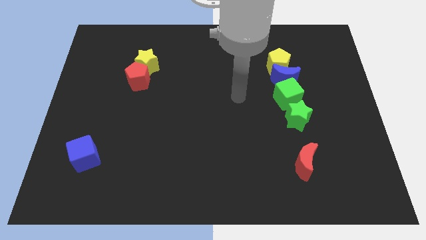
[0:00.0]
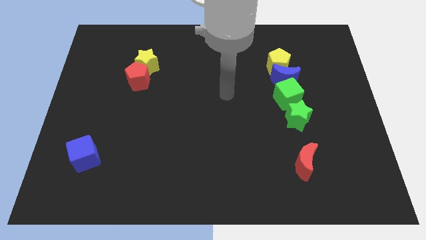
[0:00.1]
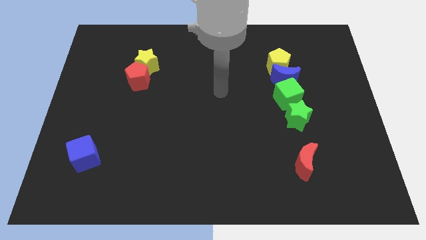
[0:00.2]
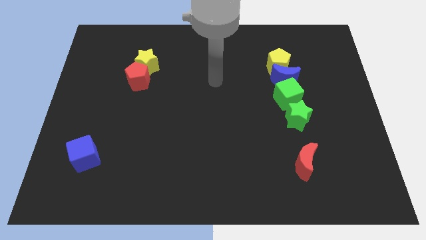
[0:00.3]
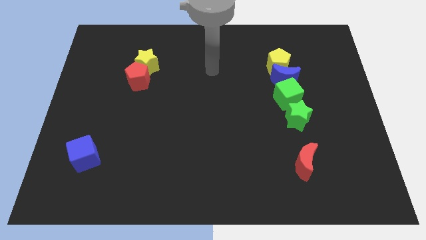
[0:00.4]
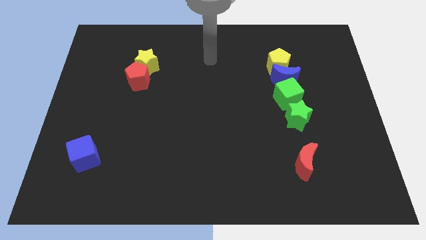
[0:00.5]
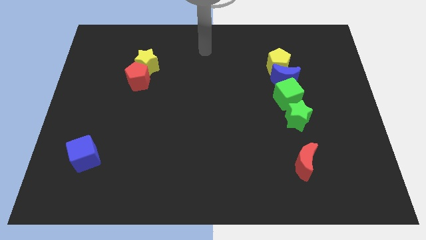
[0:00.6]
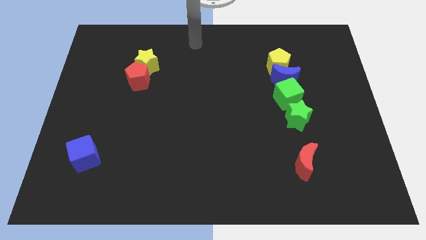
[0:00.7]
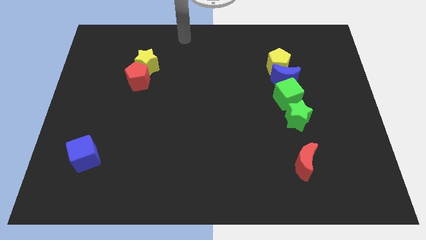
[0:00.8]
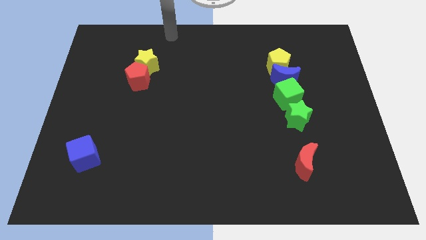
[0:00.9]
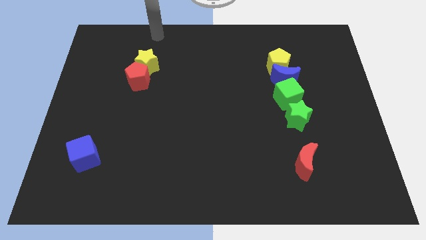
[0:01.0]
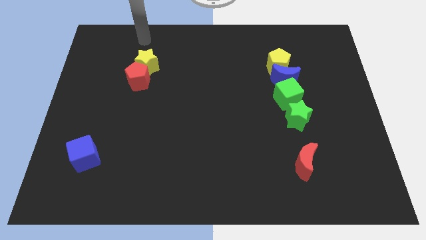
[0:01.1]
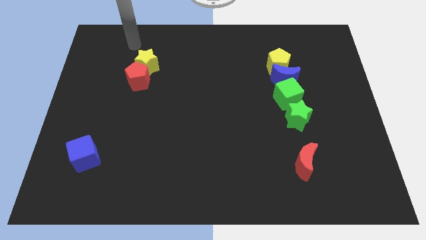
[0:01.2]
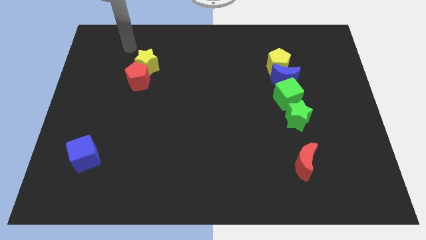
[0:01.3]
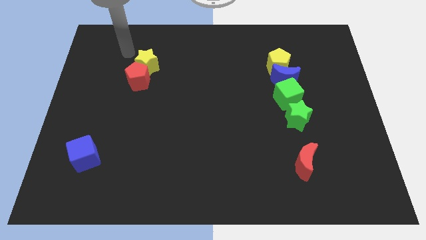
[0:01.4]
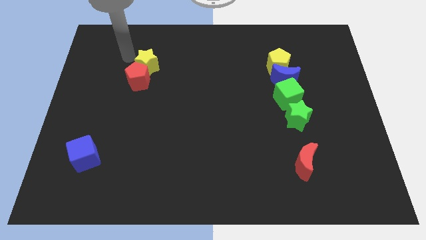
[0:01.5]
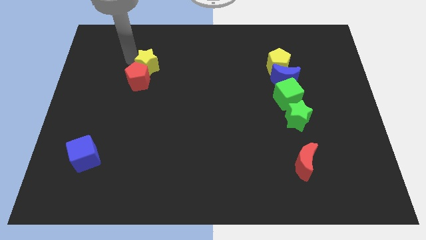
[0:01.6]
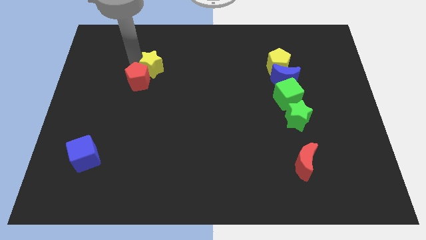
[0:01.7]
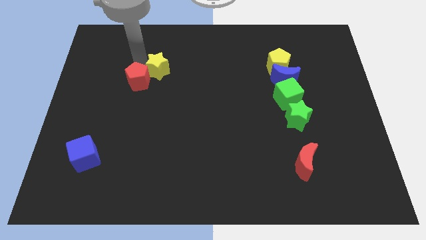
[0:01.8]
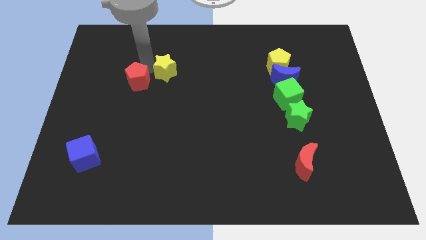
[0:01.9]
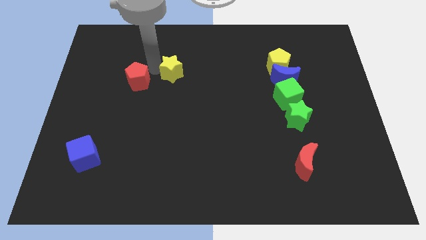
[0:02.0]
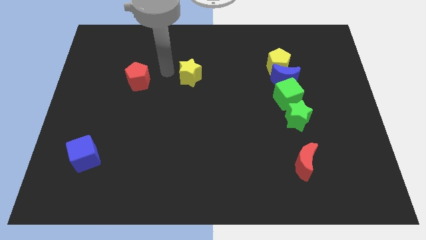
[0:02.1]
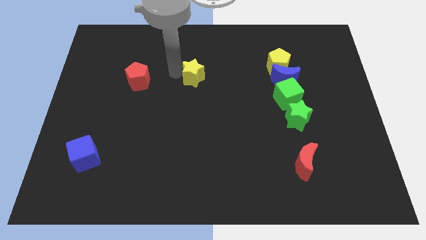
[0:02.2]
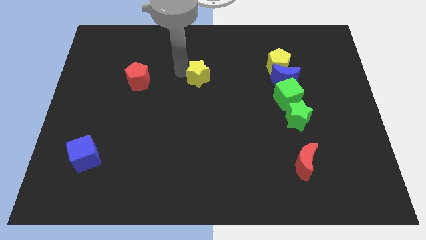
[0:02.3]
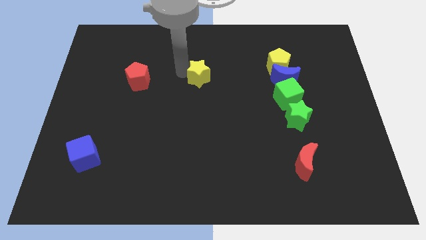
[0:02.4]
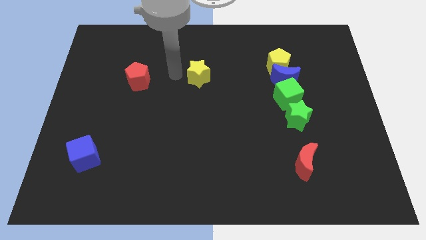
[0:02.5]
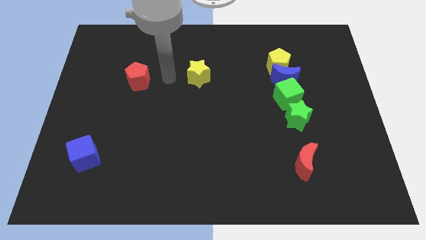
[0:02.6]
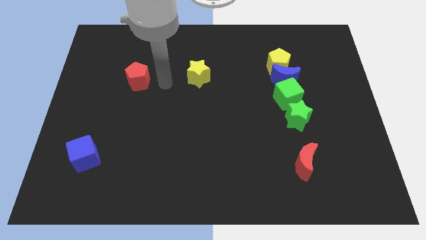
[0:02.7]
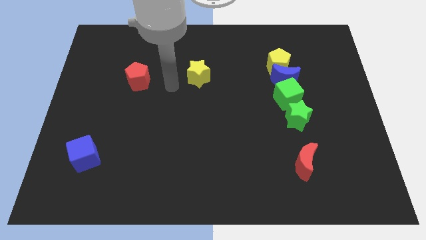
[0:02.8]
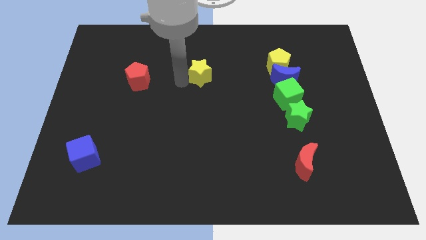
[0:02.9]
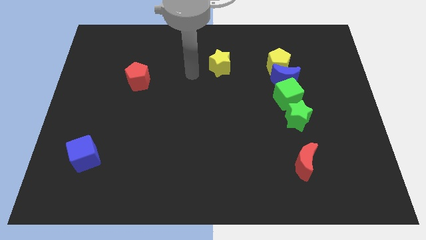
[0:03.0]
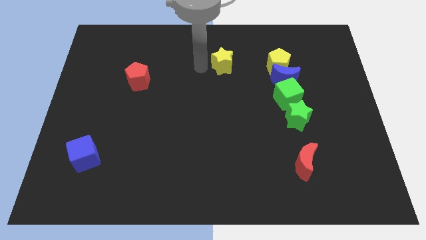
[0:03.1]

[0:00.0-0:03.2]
place the yellow star in between the red pentagon and yellow pentagon

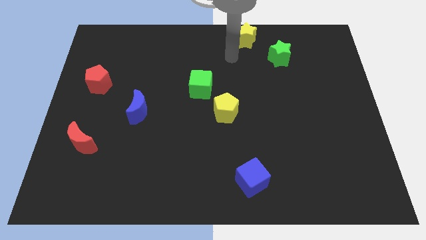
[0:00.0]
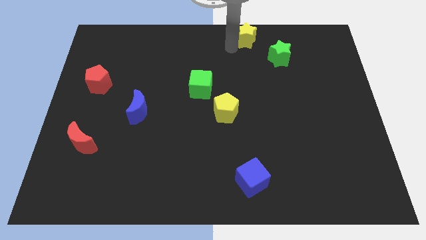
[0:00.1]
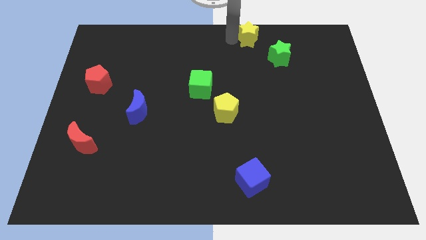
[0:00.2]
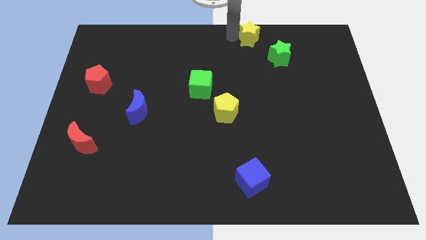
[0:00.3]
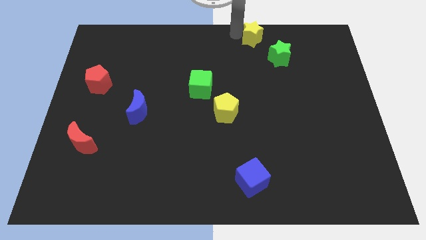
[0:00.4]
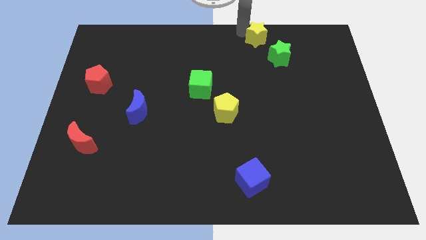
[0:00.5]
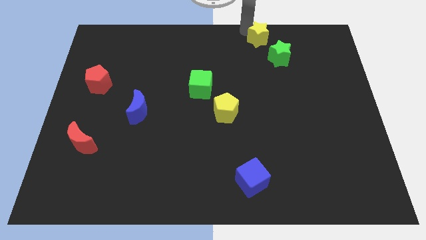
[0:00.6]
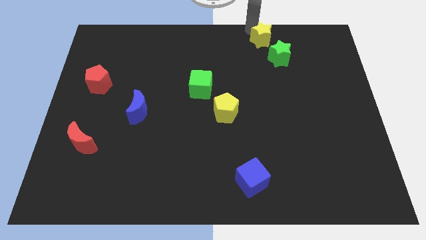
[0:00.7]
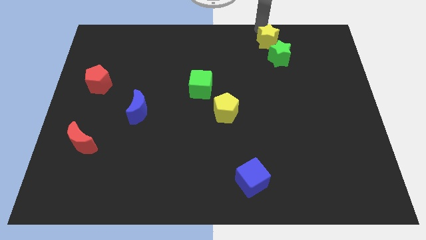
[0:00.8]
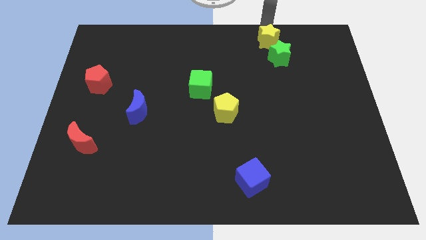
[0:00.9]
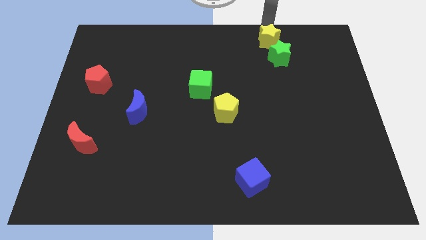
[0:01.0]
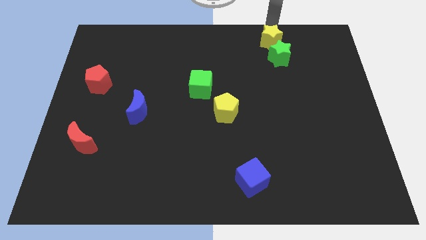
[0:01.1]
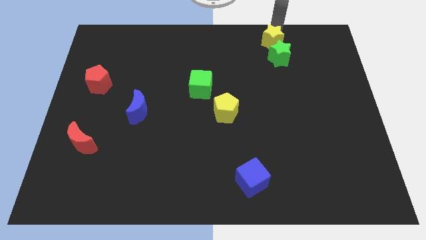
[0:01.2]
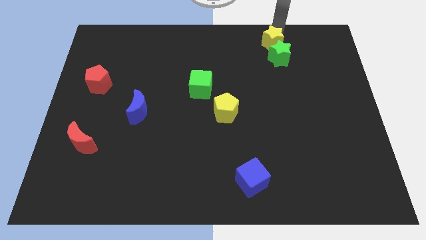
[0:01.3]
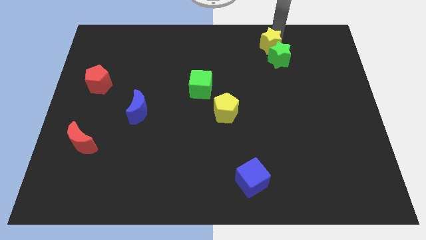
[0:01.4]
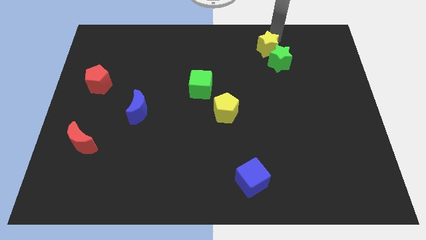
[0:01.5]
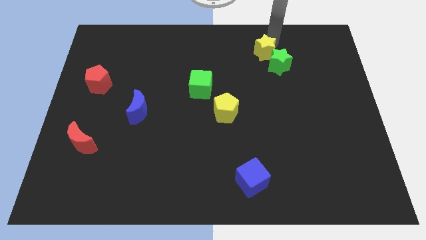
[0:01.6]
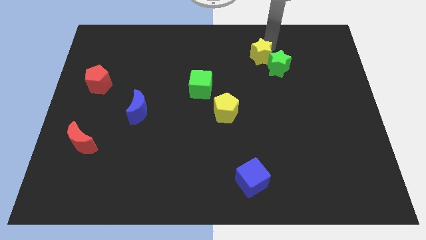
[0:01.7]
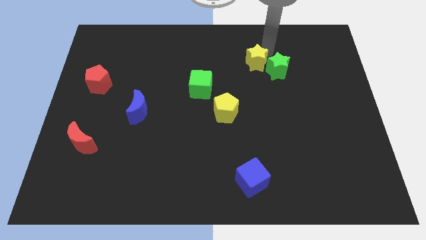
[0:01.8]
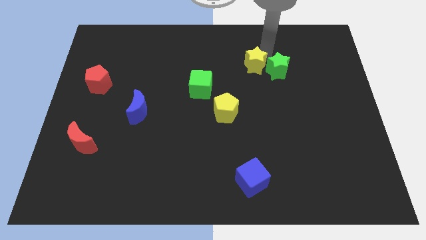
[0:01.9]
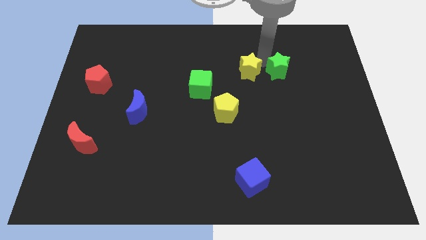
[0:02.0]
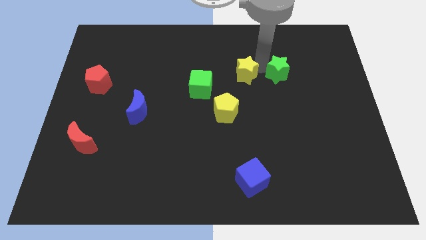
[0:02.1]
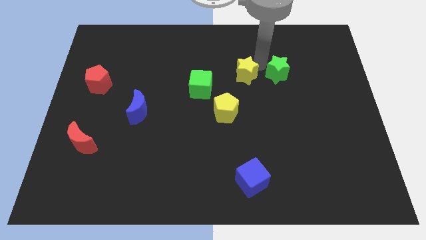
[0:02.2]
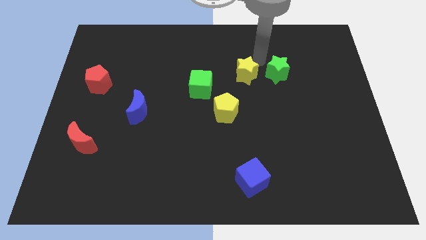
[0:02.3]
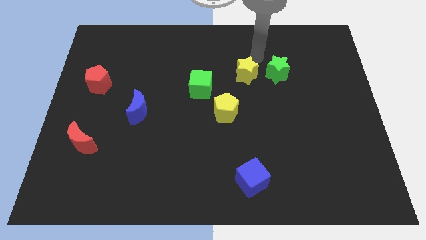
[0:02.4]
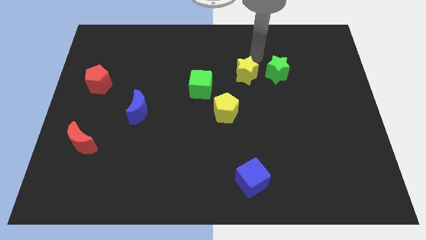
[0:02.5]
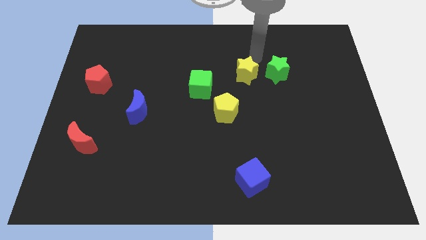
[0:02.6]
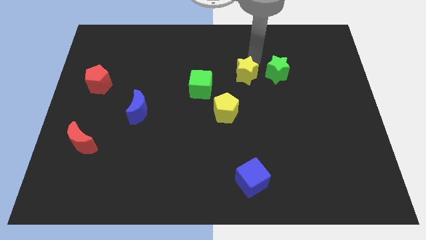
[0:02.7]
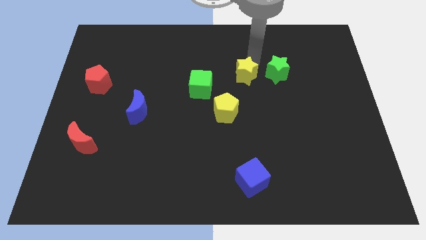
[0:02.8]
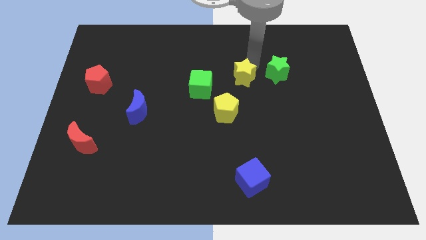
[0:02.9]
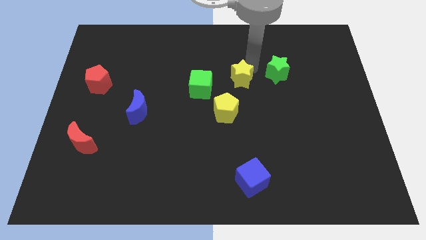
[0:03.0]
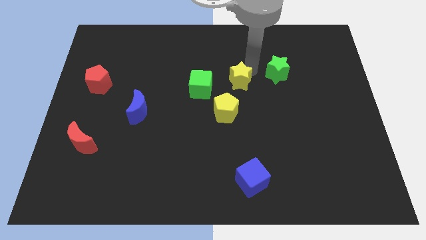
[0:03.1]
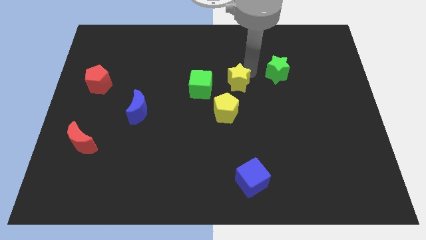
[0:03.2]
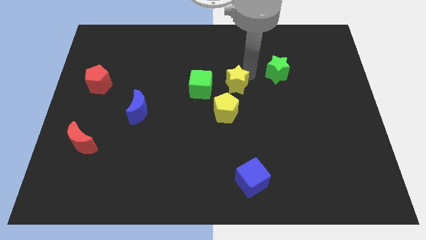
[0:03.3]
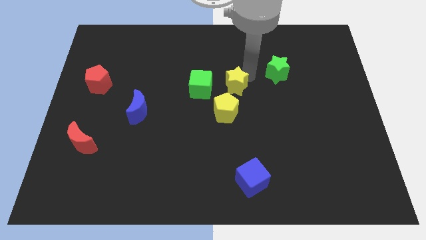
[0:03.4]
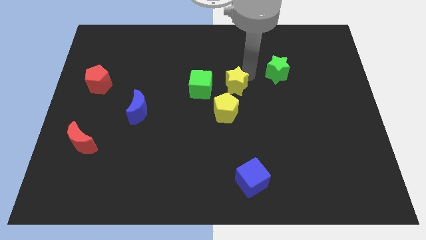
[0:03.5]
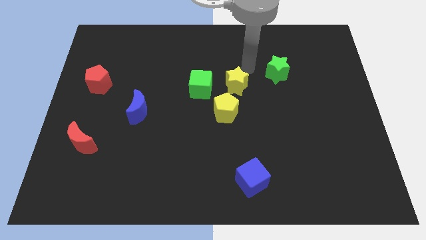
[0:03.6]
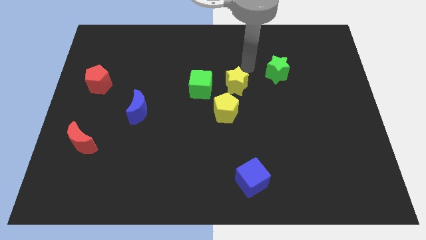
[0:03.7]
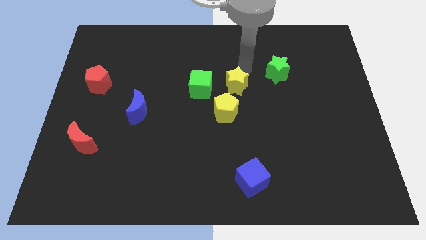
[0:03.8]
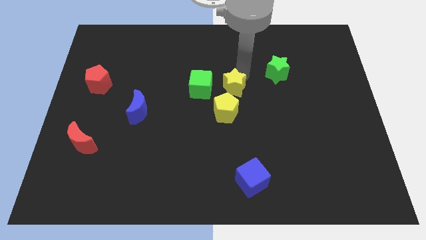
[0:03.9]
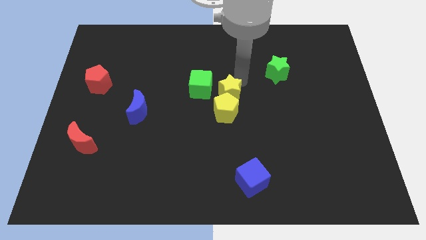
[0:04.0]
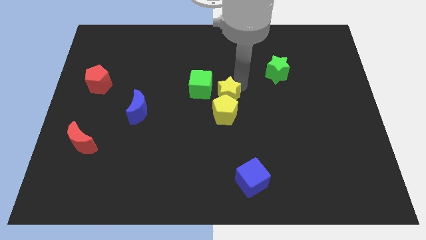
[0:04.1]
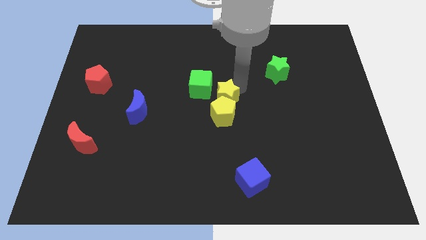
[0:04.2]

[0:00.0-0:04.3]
push the yellow star into the yellow pentagon

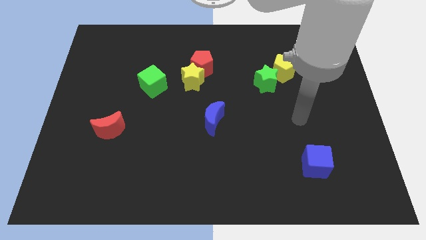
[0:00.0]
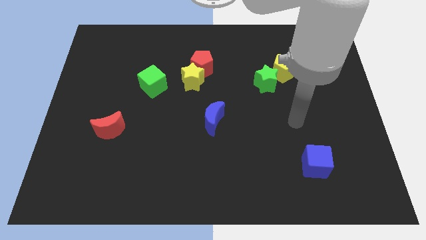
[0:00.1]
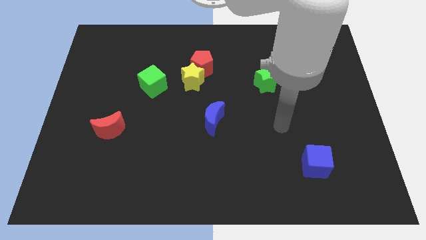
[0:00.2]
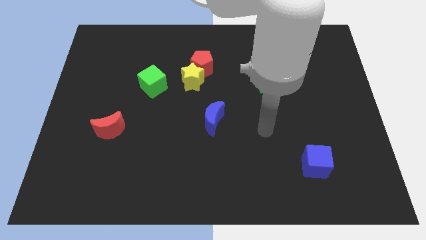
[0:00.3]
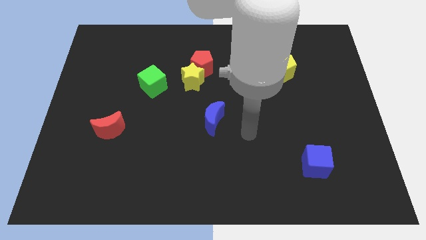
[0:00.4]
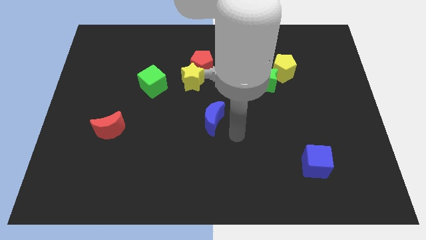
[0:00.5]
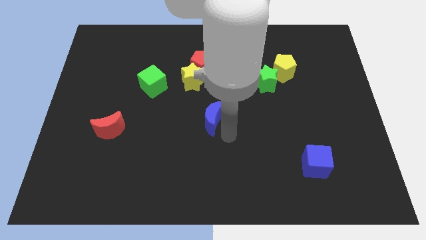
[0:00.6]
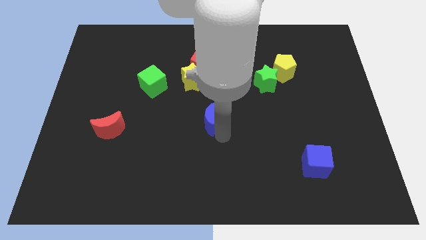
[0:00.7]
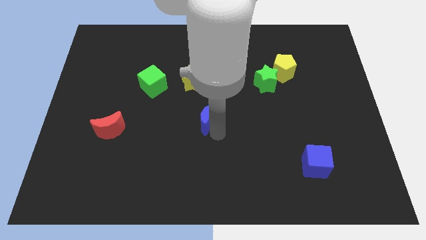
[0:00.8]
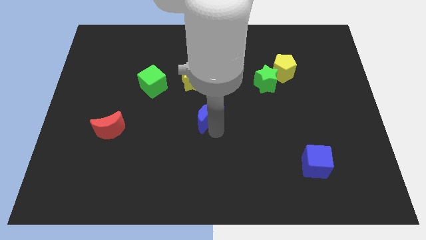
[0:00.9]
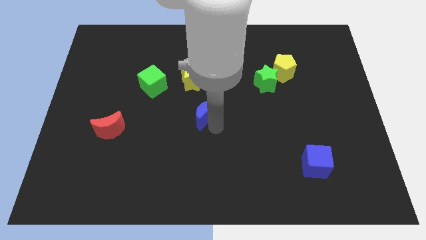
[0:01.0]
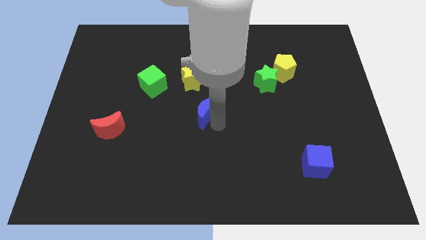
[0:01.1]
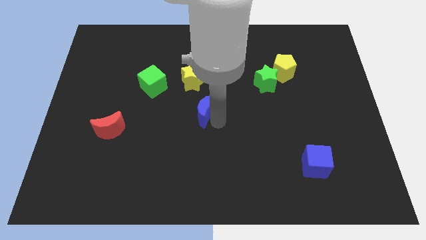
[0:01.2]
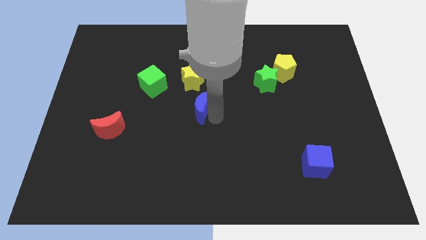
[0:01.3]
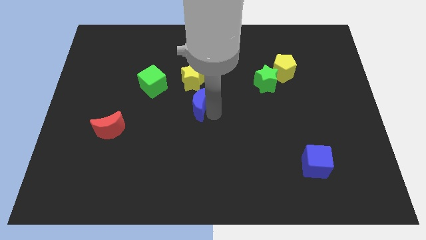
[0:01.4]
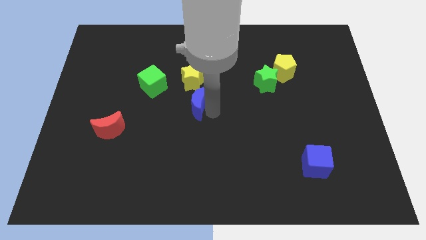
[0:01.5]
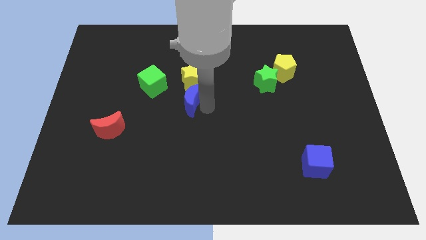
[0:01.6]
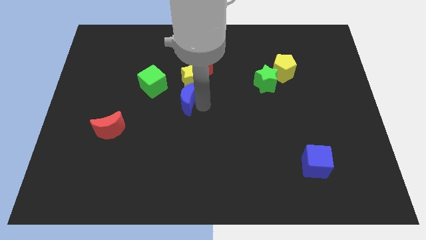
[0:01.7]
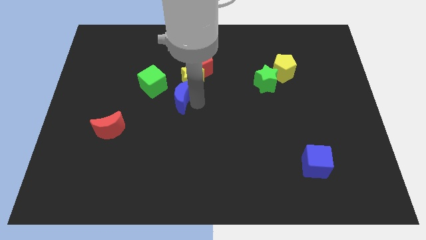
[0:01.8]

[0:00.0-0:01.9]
place the blue moon below the yellow star
